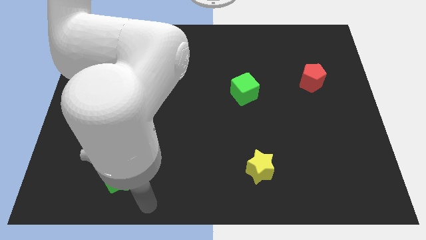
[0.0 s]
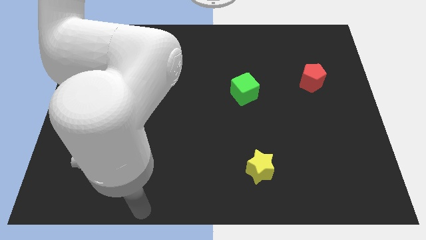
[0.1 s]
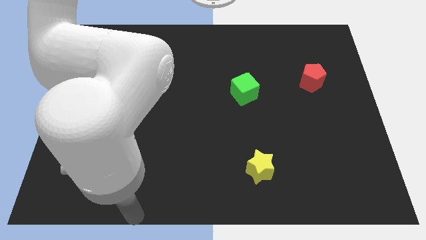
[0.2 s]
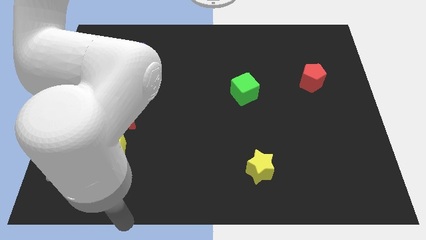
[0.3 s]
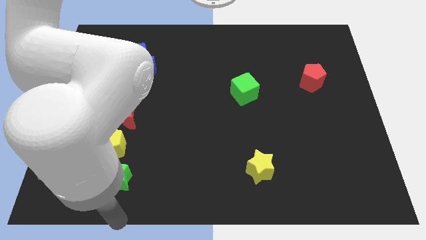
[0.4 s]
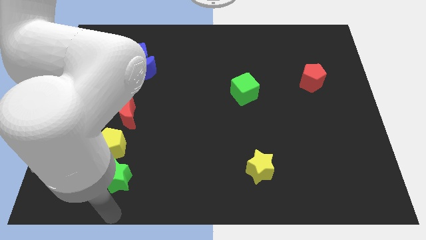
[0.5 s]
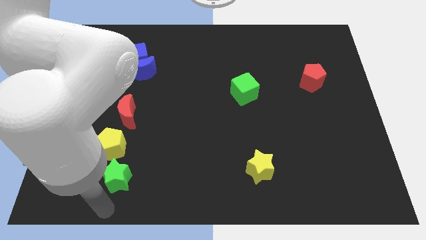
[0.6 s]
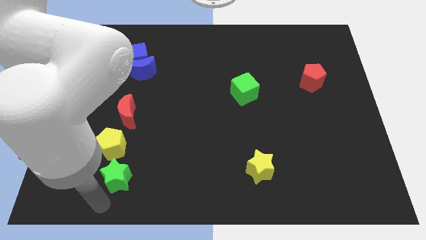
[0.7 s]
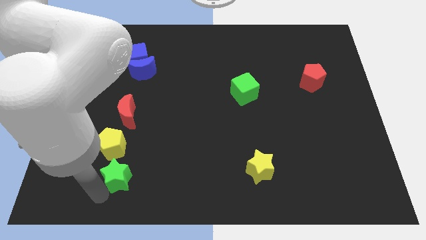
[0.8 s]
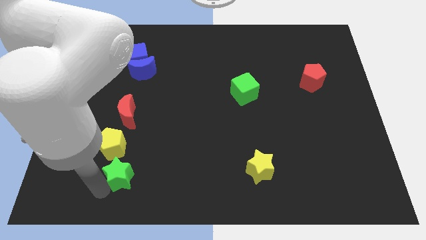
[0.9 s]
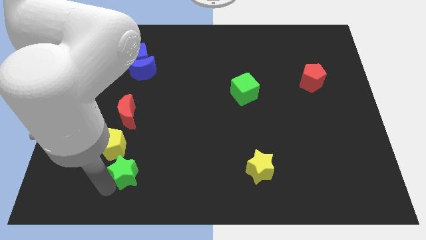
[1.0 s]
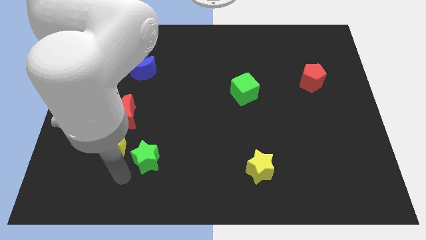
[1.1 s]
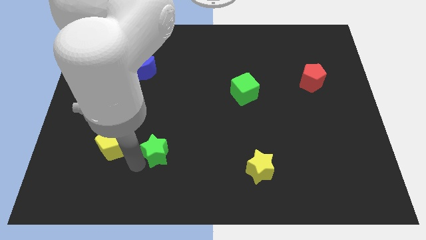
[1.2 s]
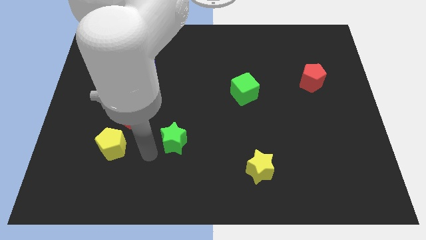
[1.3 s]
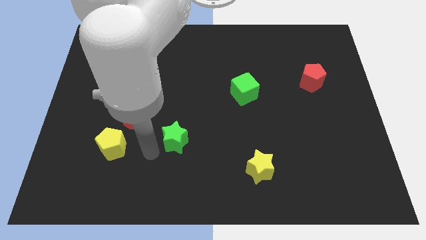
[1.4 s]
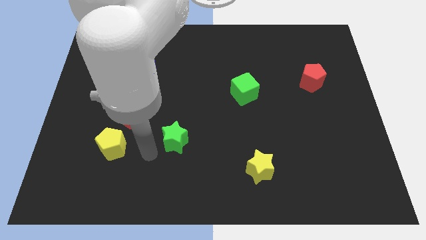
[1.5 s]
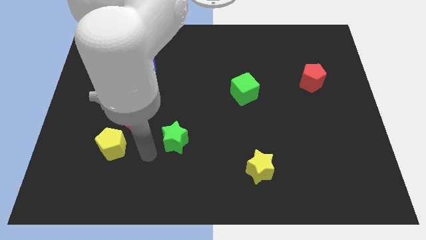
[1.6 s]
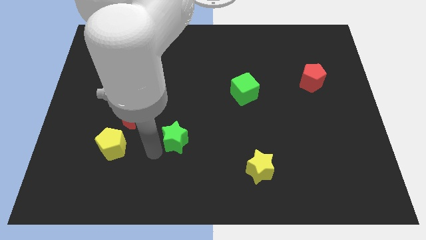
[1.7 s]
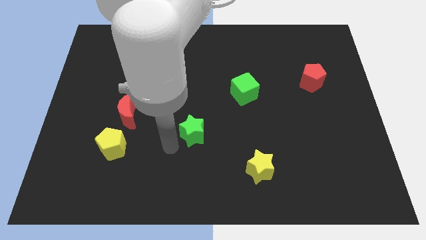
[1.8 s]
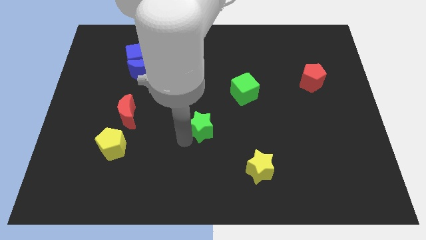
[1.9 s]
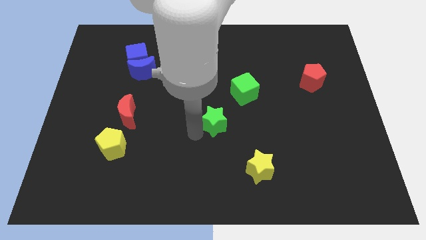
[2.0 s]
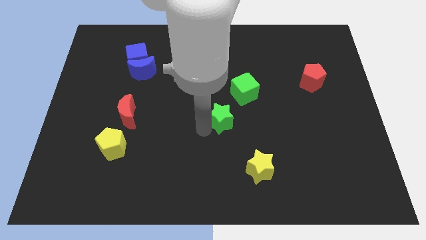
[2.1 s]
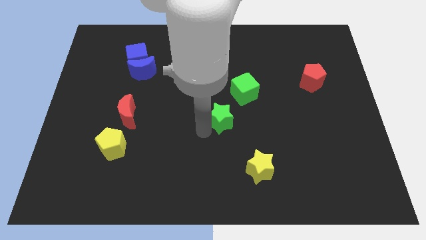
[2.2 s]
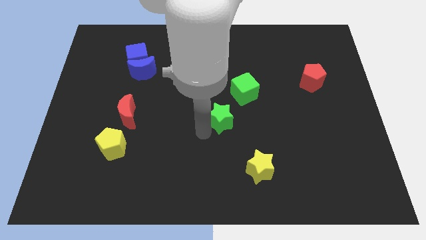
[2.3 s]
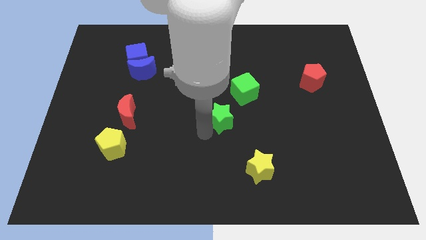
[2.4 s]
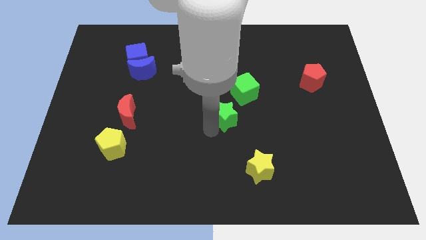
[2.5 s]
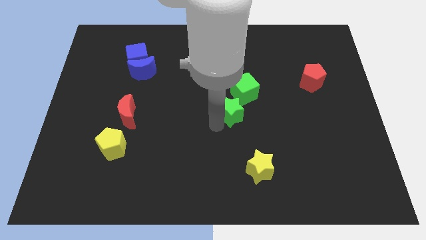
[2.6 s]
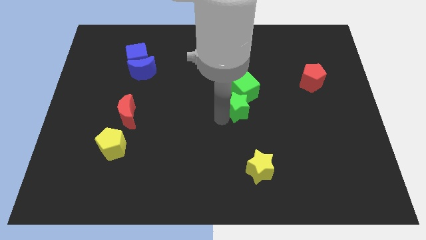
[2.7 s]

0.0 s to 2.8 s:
move the green star diagonally to the bottom left of the green cube

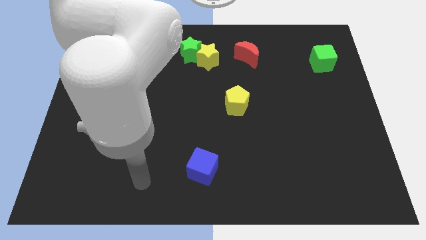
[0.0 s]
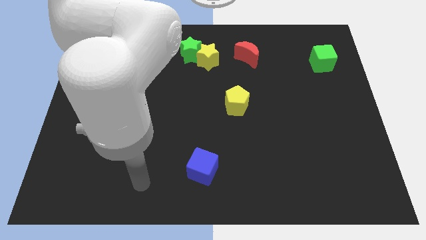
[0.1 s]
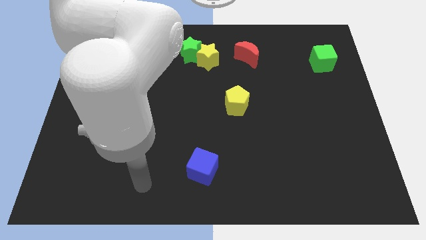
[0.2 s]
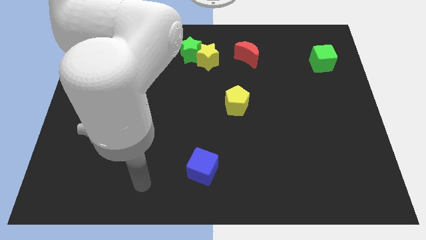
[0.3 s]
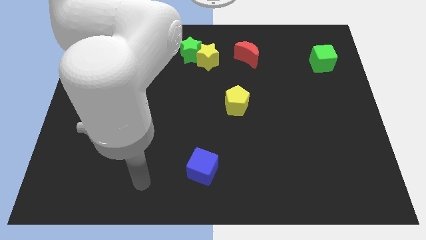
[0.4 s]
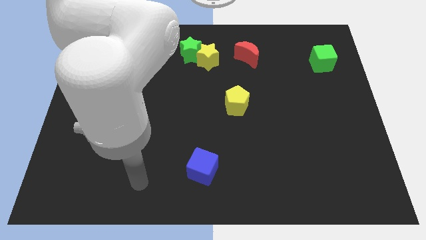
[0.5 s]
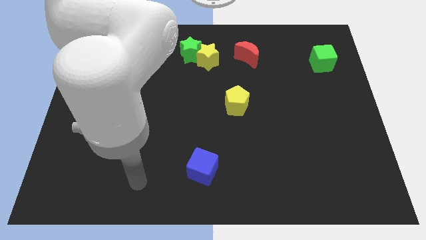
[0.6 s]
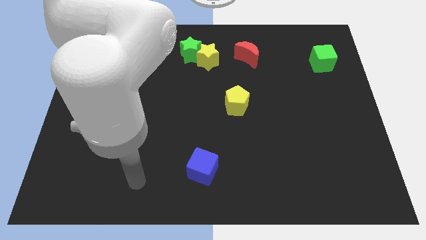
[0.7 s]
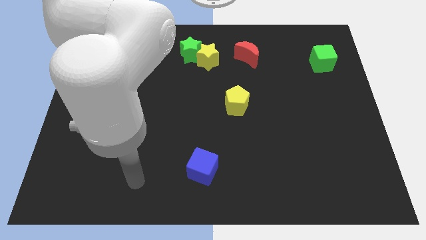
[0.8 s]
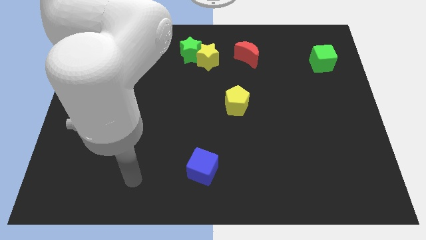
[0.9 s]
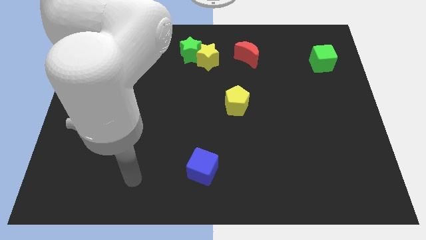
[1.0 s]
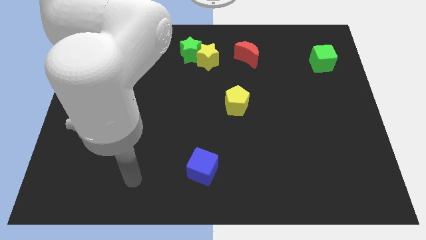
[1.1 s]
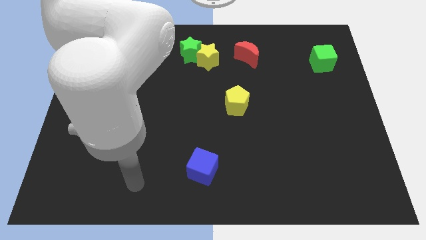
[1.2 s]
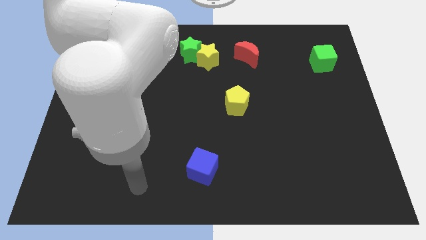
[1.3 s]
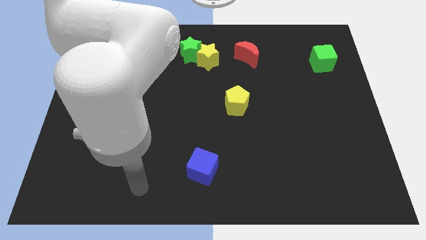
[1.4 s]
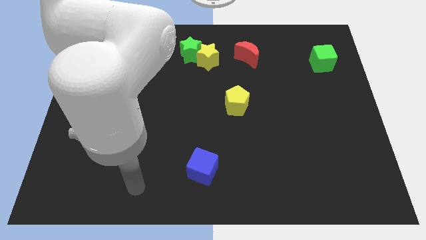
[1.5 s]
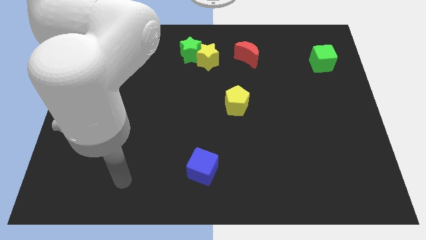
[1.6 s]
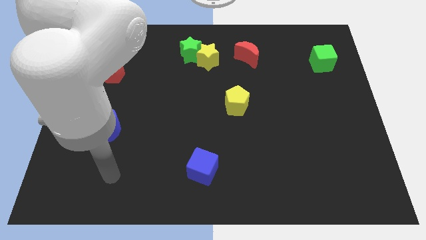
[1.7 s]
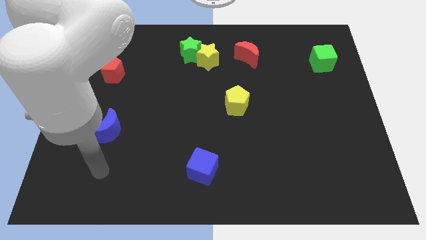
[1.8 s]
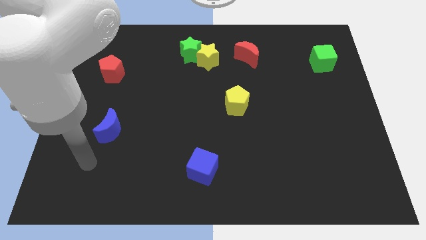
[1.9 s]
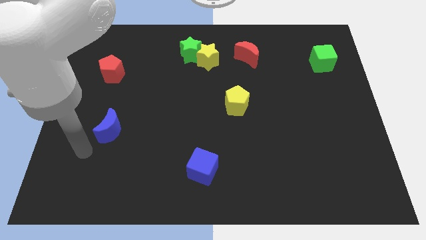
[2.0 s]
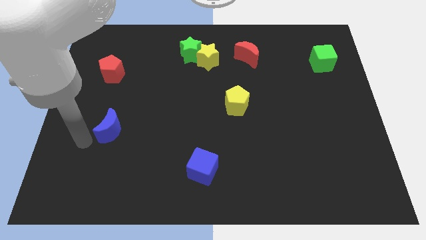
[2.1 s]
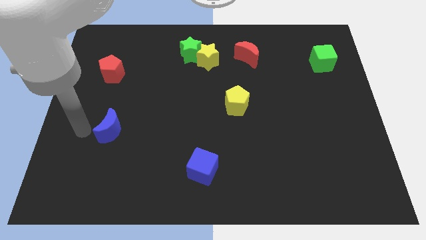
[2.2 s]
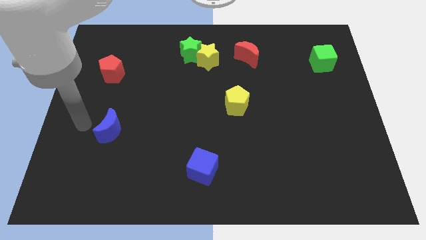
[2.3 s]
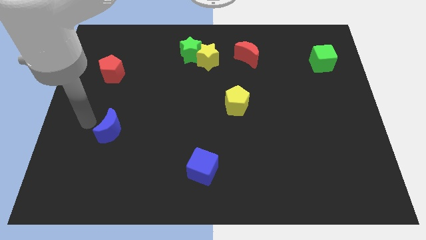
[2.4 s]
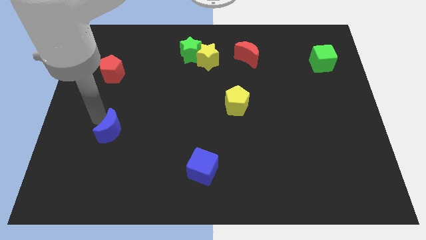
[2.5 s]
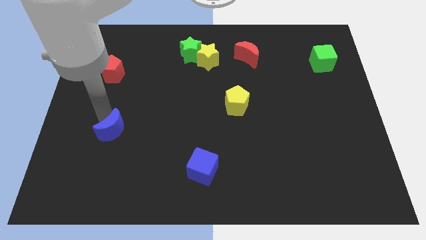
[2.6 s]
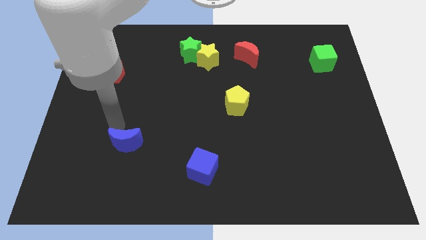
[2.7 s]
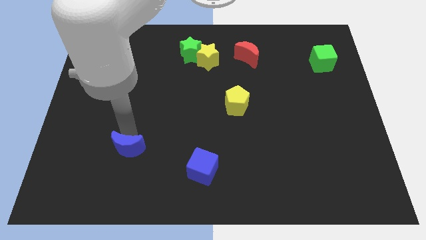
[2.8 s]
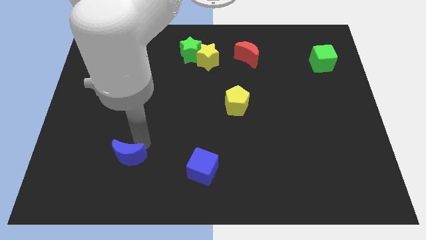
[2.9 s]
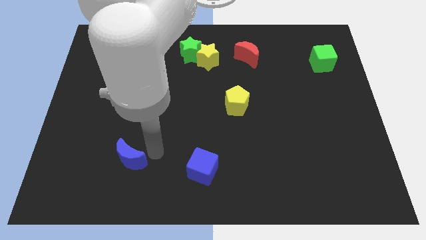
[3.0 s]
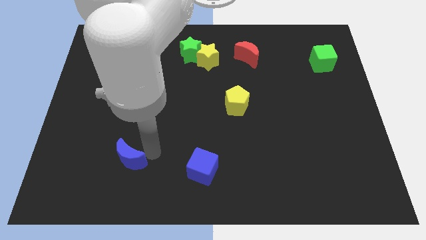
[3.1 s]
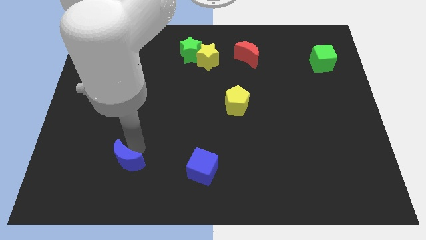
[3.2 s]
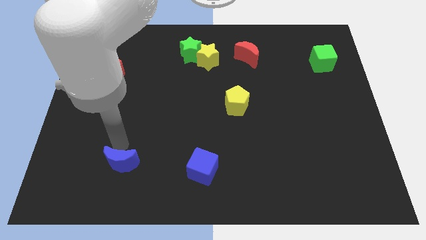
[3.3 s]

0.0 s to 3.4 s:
move the blue crescent left parallel to the blue cube

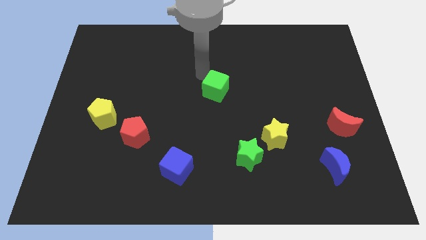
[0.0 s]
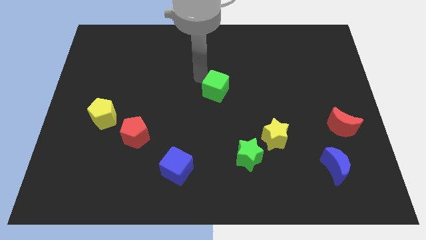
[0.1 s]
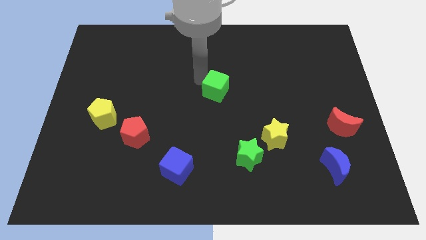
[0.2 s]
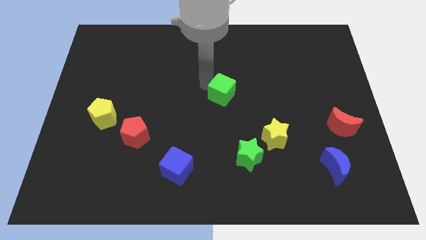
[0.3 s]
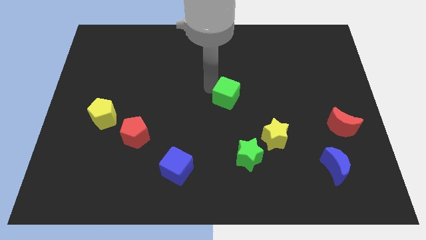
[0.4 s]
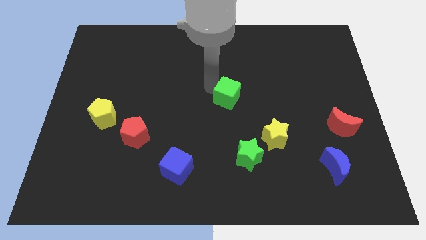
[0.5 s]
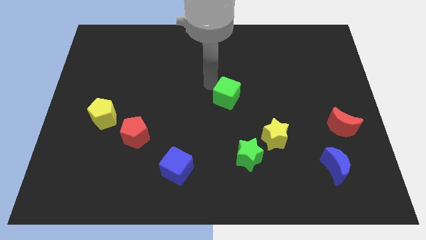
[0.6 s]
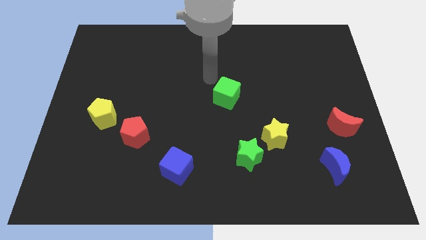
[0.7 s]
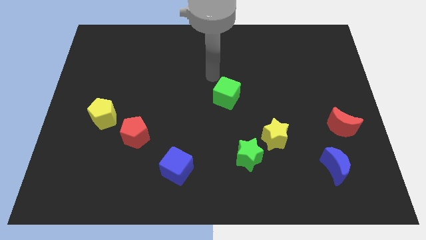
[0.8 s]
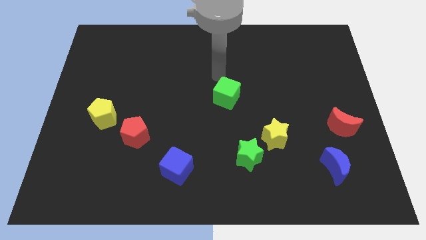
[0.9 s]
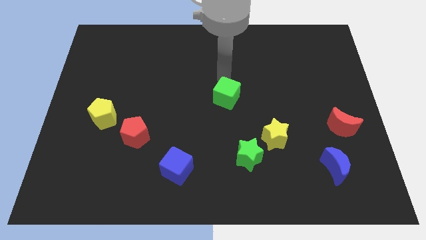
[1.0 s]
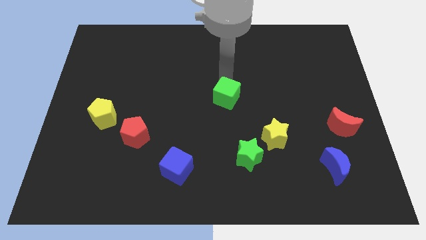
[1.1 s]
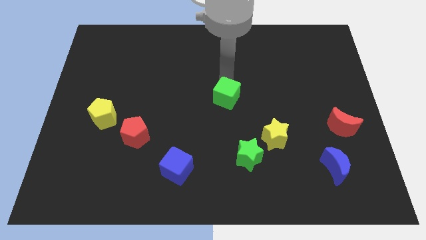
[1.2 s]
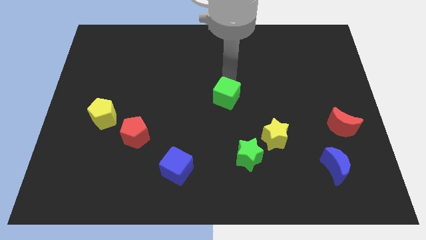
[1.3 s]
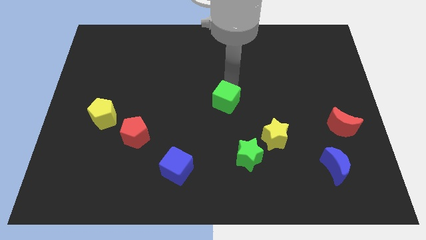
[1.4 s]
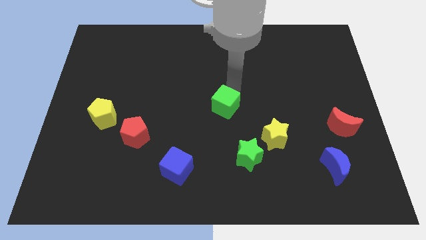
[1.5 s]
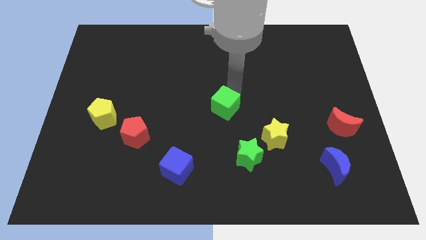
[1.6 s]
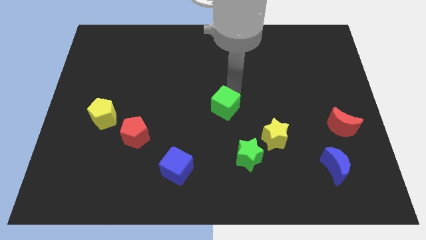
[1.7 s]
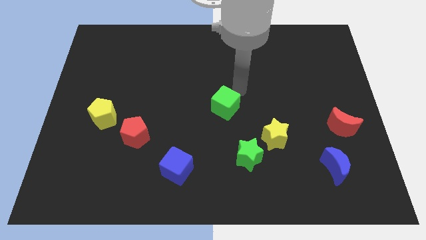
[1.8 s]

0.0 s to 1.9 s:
move the green cube towards the center of the board

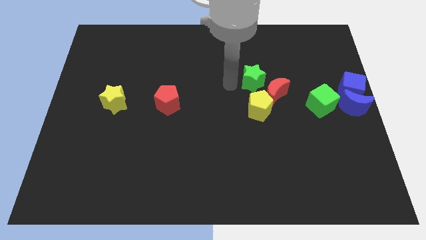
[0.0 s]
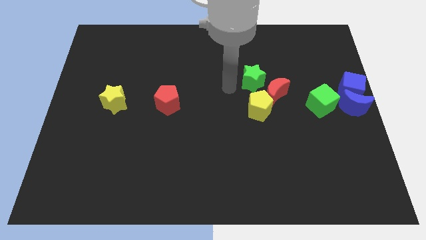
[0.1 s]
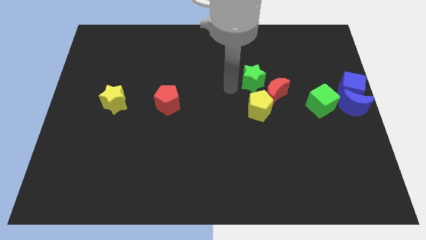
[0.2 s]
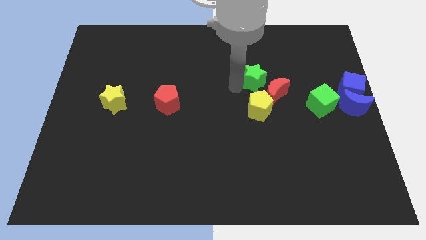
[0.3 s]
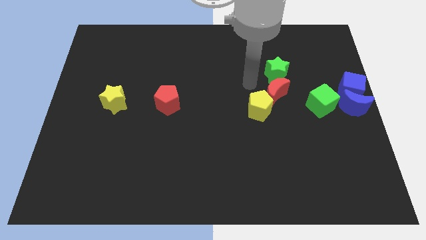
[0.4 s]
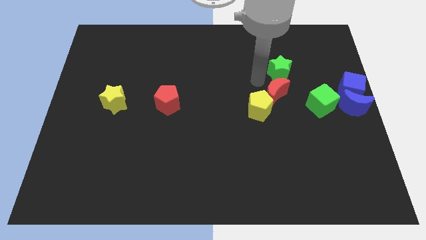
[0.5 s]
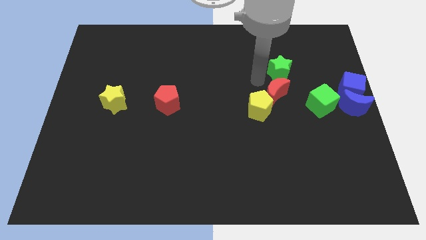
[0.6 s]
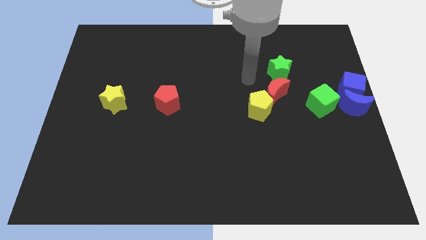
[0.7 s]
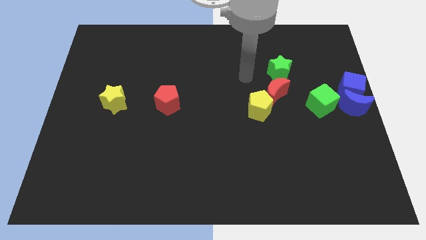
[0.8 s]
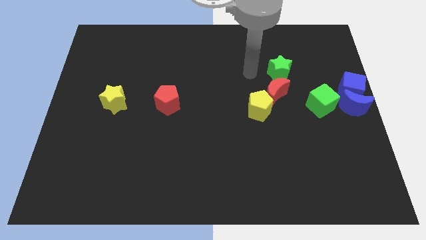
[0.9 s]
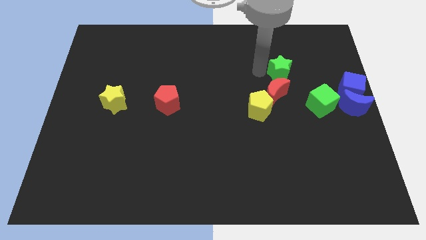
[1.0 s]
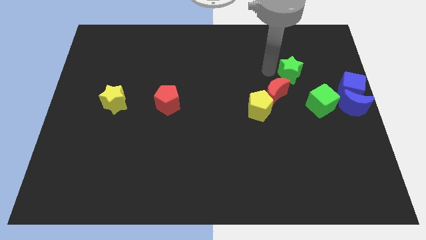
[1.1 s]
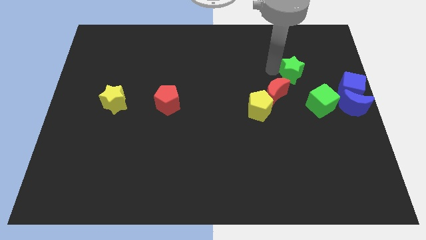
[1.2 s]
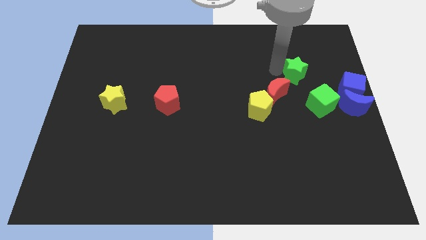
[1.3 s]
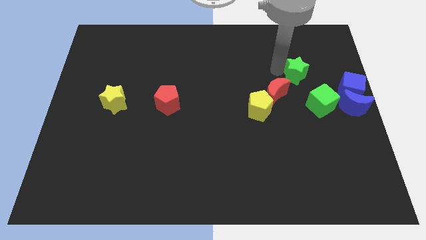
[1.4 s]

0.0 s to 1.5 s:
move the green star to the top of the red crescent
